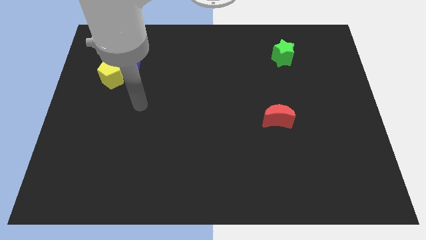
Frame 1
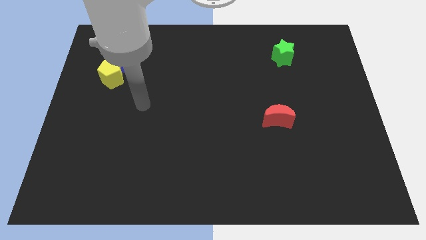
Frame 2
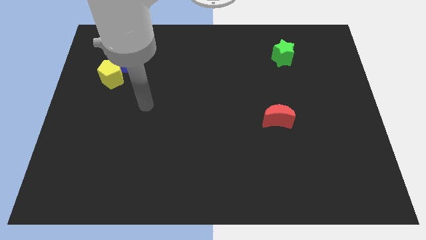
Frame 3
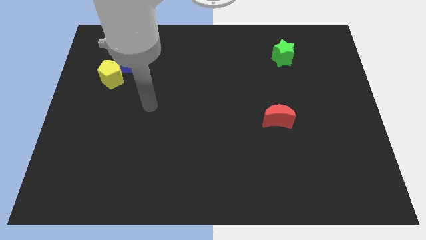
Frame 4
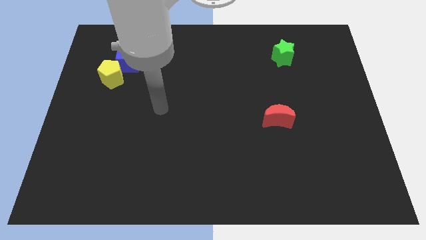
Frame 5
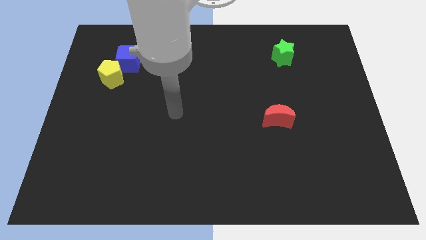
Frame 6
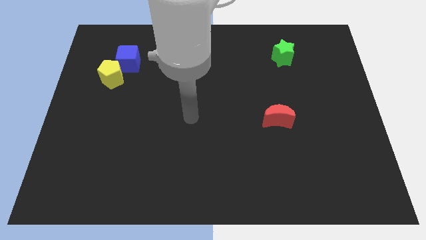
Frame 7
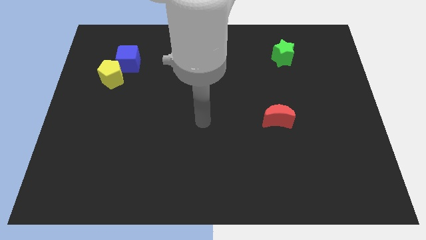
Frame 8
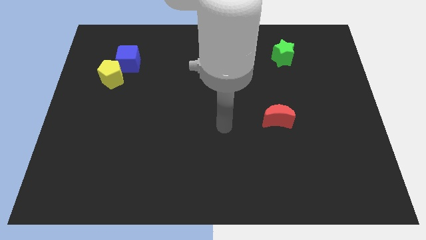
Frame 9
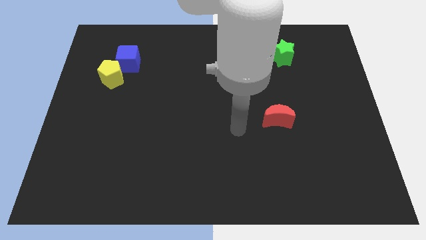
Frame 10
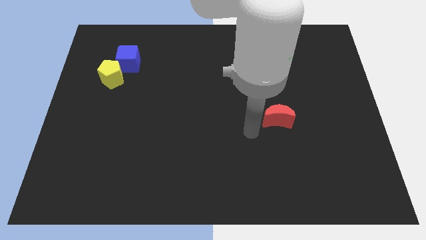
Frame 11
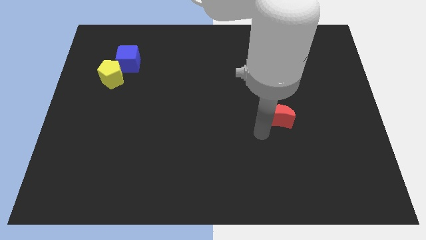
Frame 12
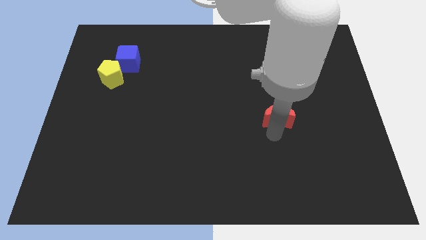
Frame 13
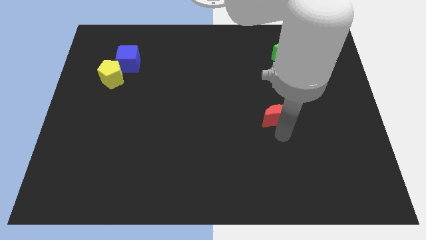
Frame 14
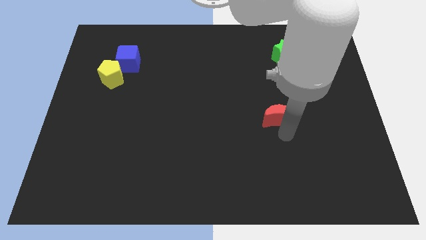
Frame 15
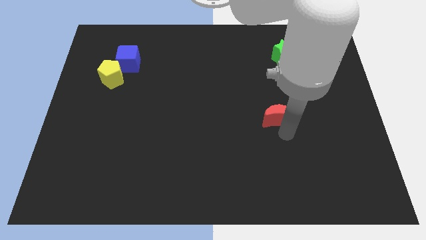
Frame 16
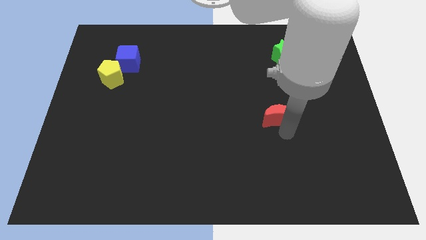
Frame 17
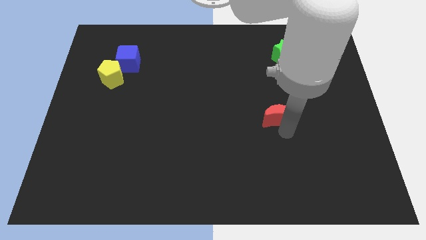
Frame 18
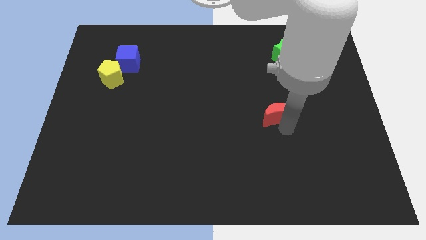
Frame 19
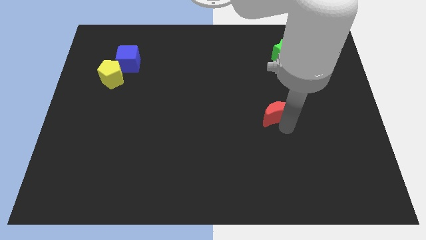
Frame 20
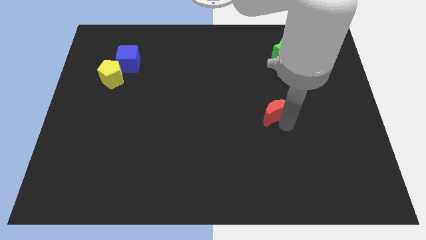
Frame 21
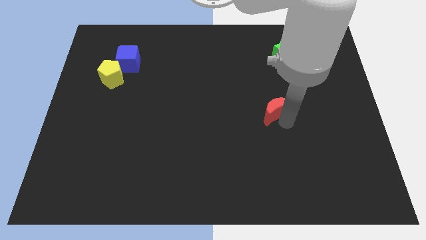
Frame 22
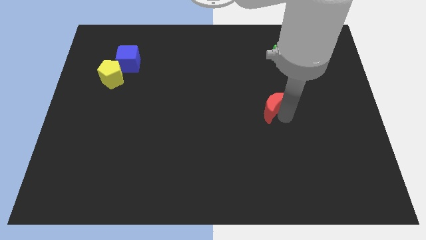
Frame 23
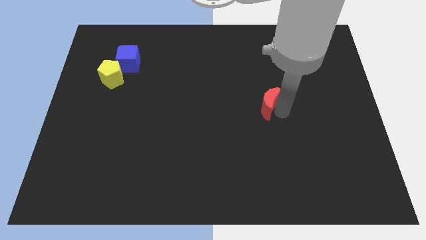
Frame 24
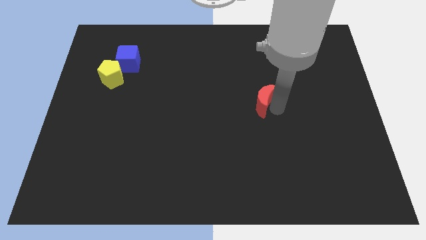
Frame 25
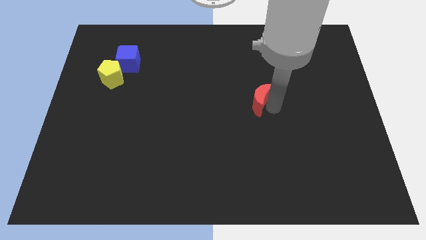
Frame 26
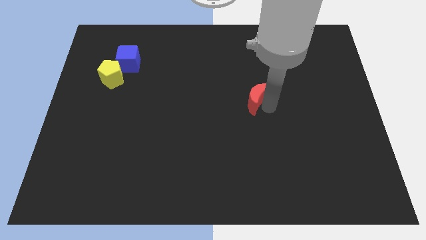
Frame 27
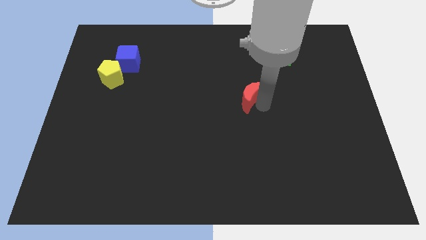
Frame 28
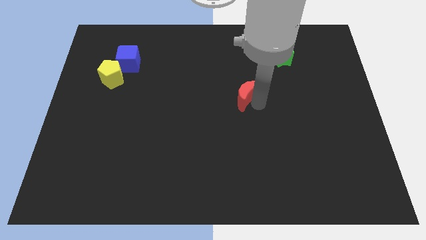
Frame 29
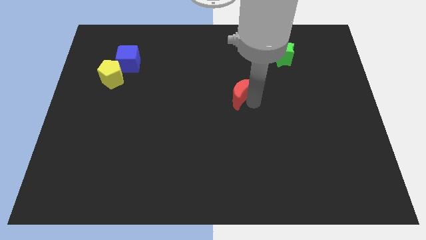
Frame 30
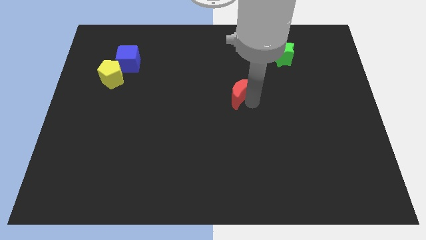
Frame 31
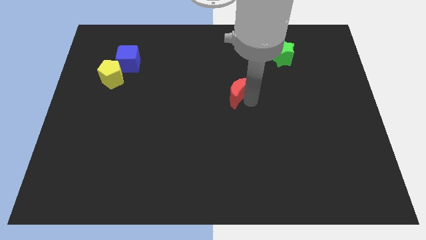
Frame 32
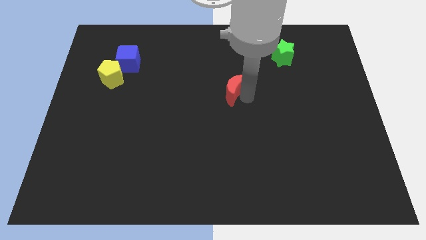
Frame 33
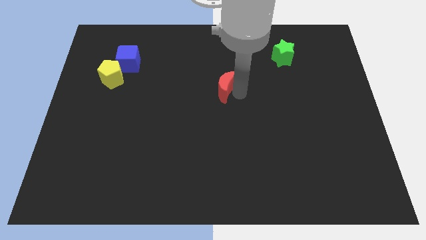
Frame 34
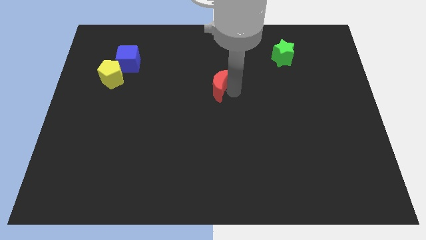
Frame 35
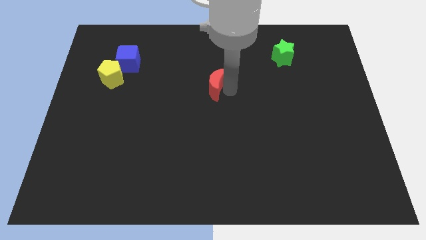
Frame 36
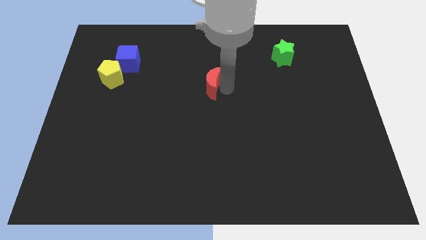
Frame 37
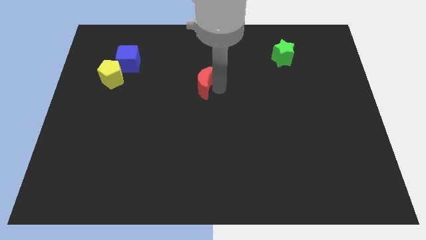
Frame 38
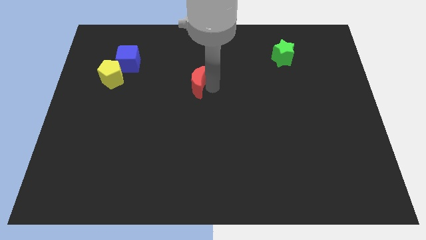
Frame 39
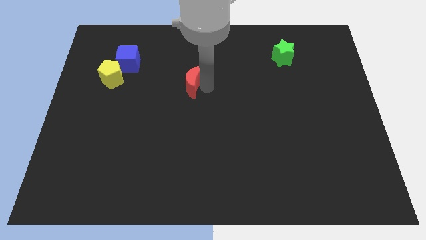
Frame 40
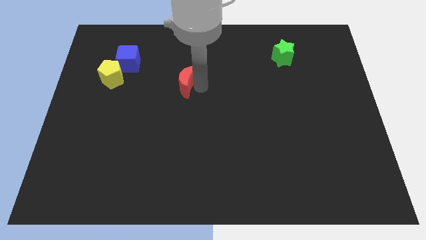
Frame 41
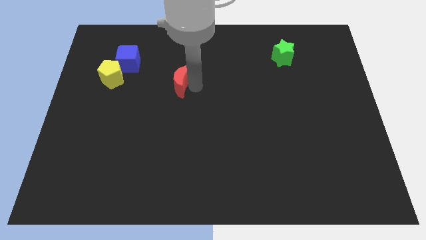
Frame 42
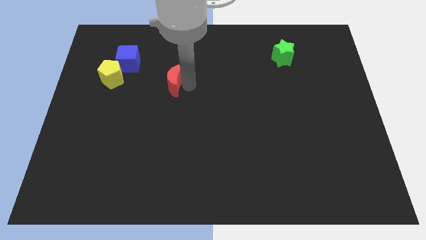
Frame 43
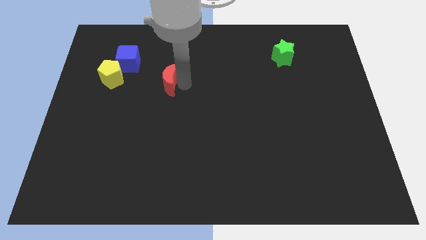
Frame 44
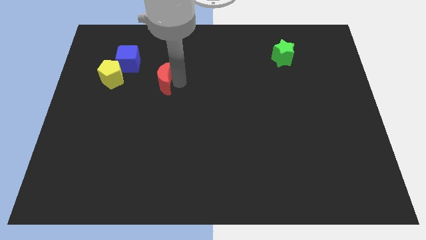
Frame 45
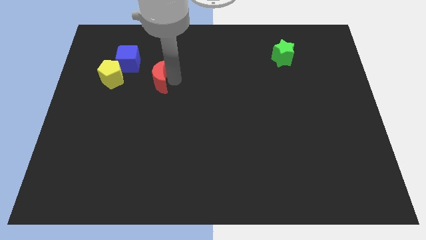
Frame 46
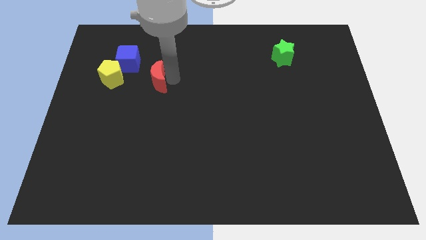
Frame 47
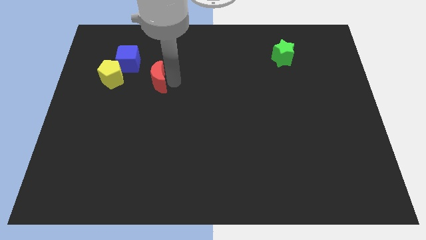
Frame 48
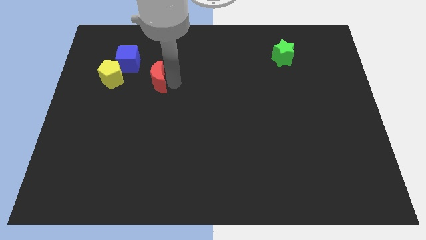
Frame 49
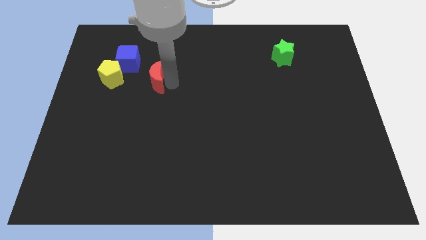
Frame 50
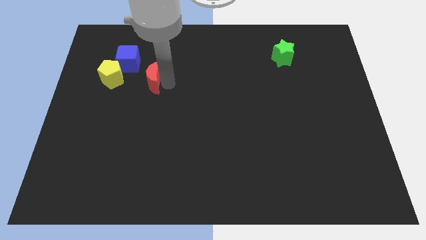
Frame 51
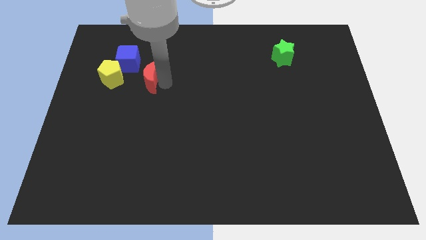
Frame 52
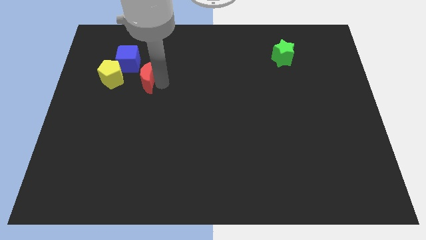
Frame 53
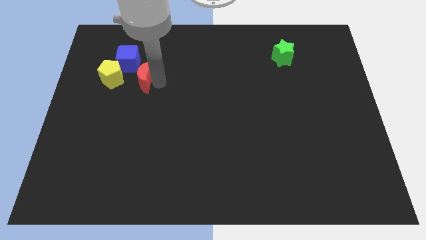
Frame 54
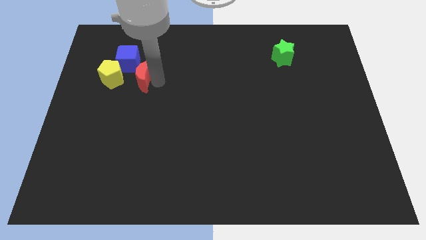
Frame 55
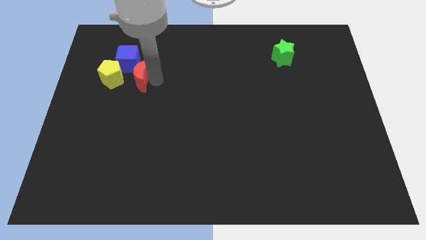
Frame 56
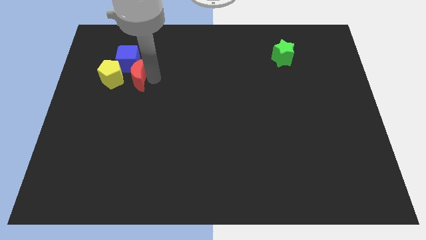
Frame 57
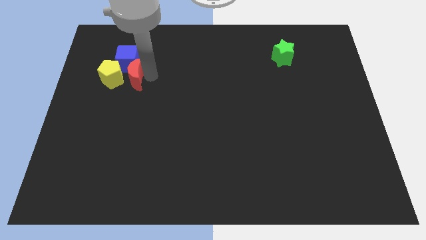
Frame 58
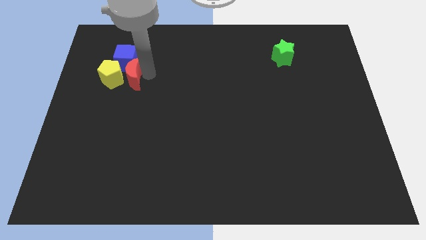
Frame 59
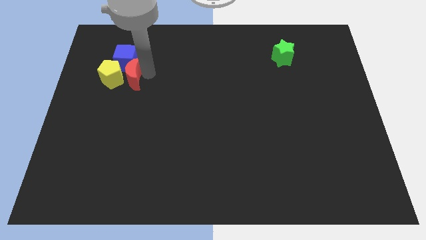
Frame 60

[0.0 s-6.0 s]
move the red moon next to the cube

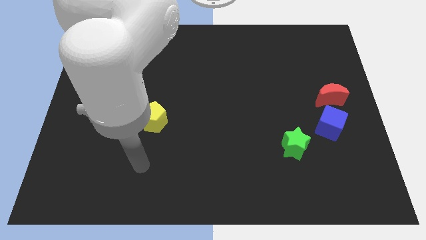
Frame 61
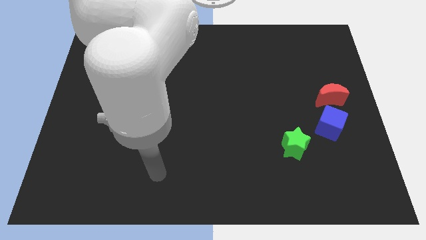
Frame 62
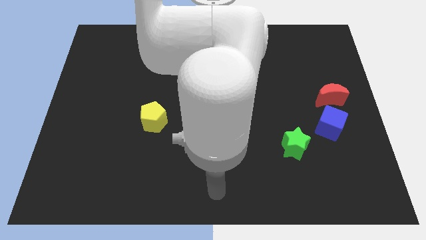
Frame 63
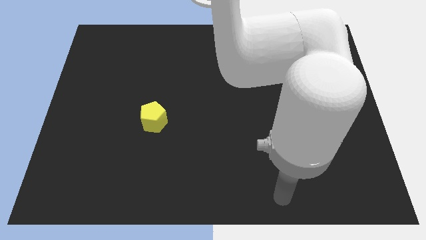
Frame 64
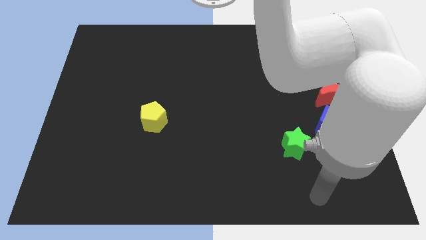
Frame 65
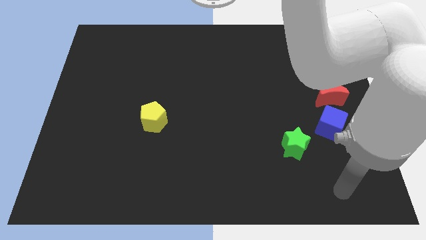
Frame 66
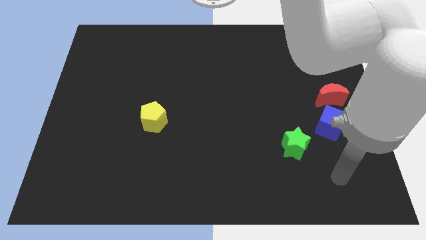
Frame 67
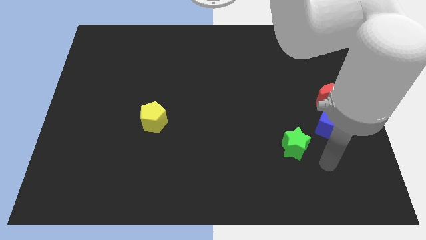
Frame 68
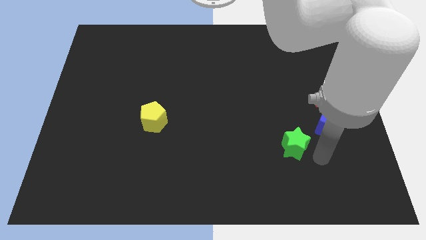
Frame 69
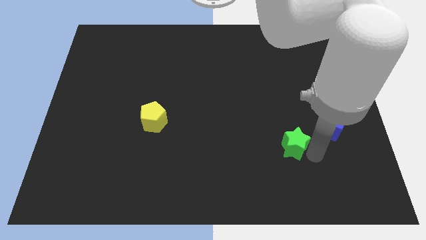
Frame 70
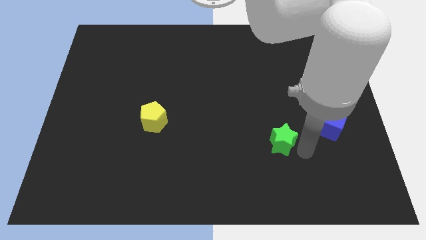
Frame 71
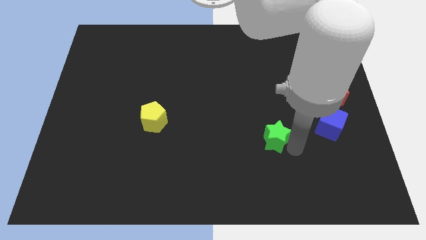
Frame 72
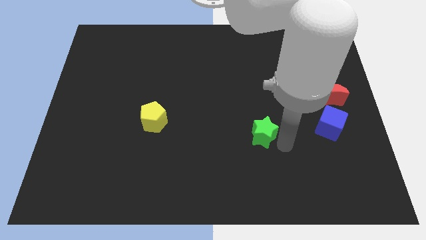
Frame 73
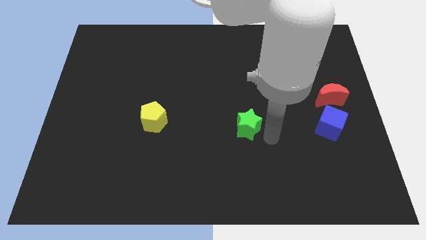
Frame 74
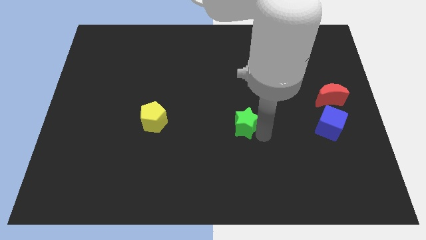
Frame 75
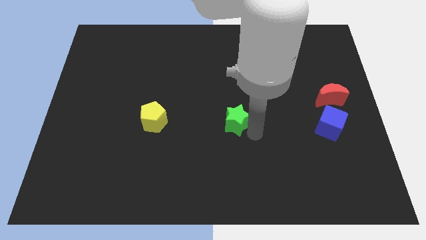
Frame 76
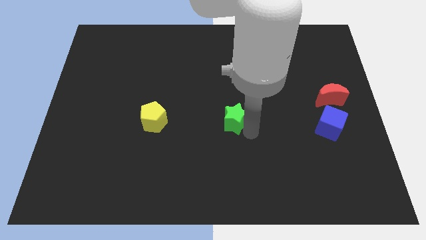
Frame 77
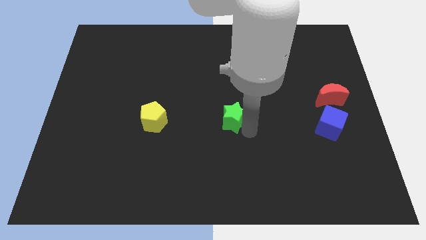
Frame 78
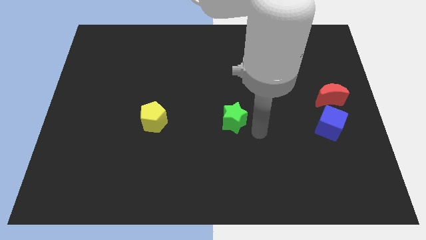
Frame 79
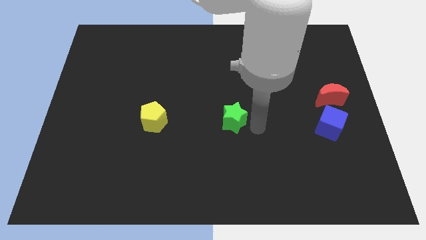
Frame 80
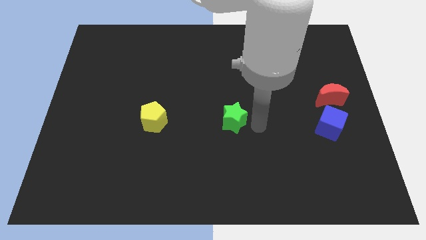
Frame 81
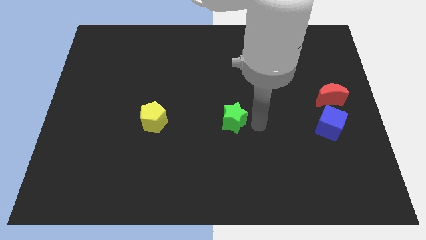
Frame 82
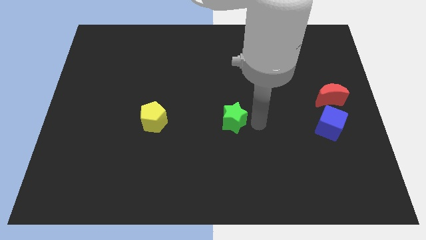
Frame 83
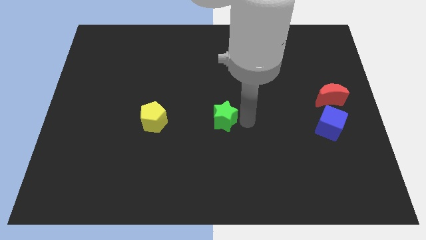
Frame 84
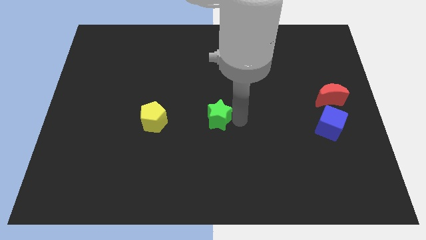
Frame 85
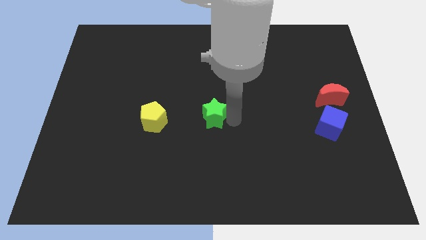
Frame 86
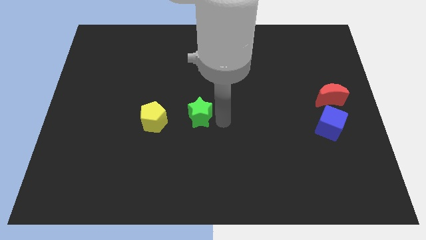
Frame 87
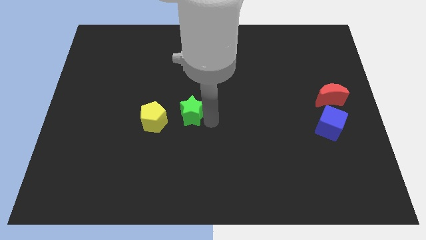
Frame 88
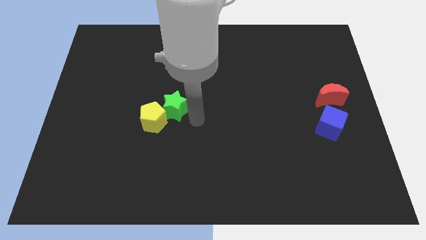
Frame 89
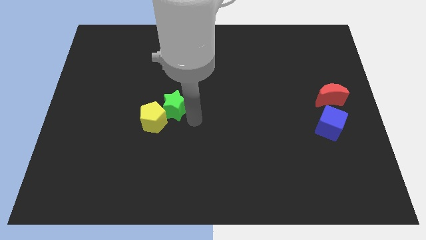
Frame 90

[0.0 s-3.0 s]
slide the star towards the yellow pentagon
